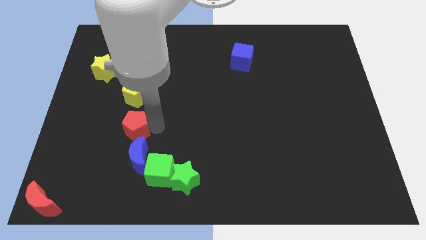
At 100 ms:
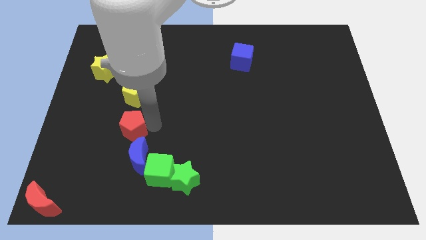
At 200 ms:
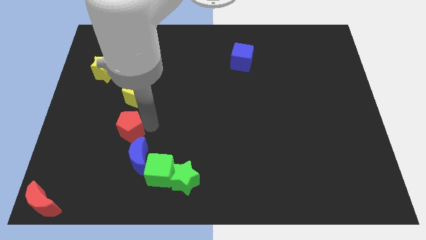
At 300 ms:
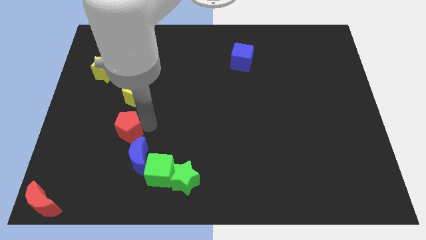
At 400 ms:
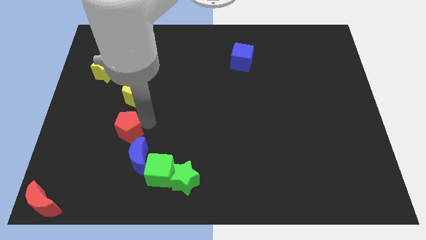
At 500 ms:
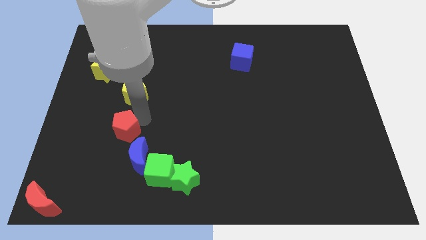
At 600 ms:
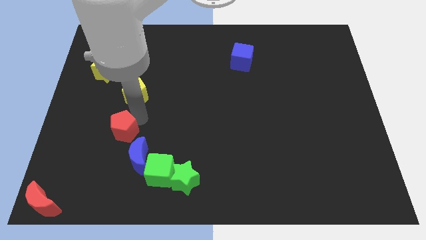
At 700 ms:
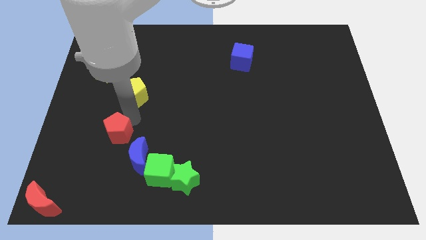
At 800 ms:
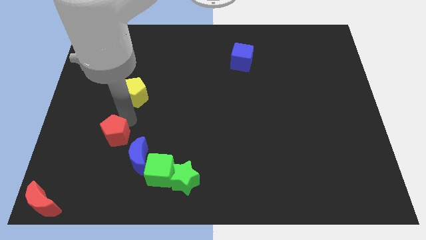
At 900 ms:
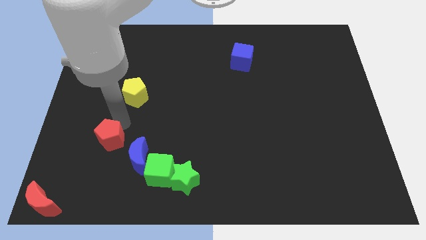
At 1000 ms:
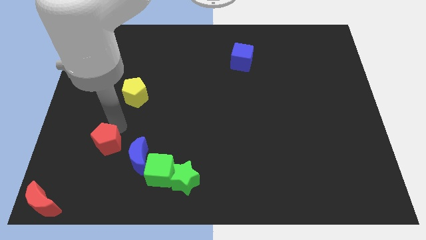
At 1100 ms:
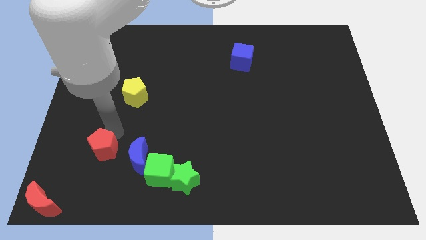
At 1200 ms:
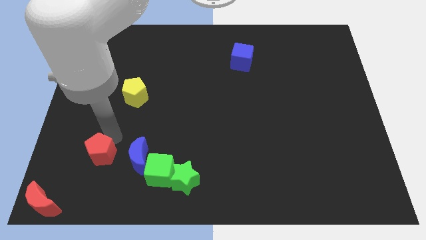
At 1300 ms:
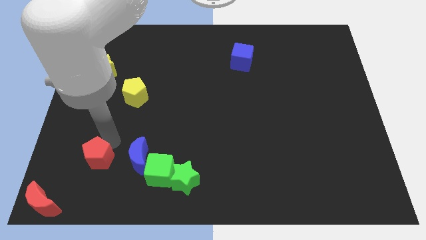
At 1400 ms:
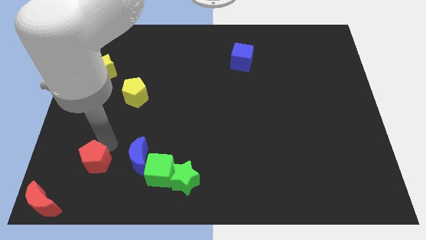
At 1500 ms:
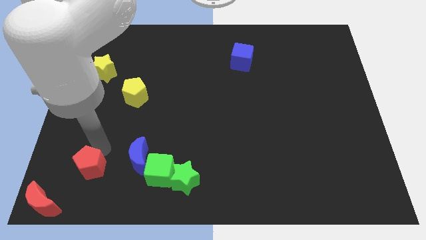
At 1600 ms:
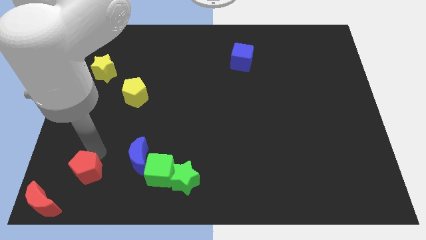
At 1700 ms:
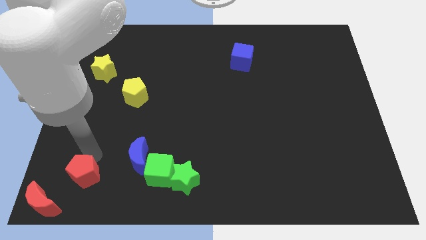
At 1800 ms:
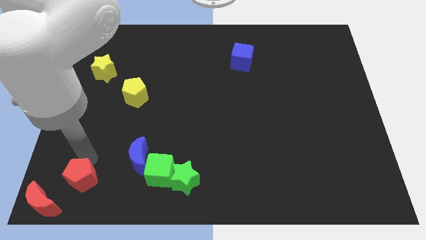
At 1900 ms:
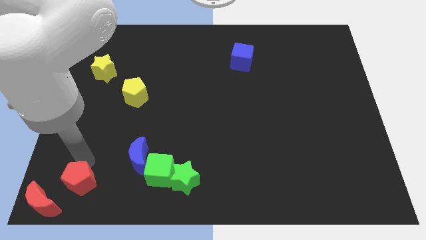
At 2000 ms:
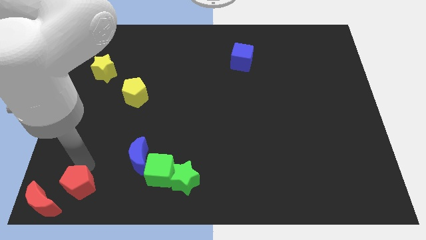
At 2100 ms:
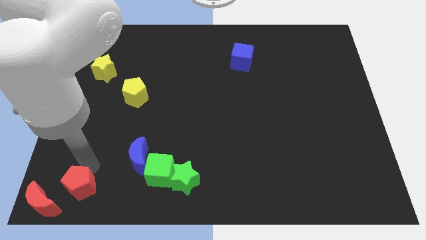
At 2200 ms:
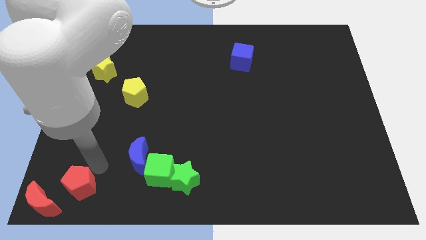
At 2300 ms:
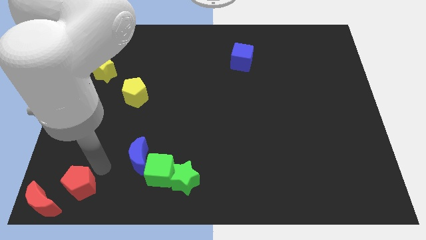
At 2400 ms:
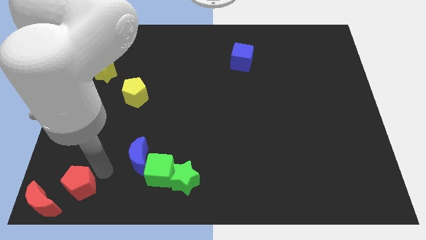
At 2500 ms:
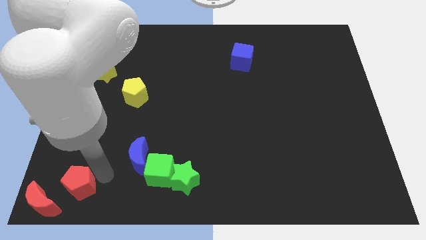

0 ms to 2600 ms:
move the red pentagon to the top right side of the red moon

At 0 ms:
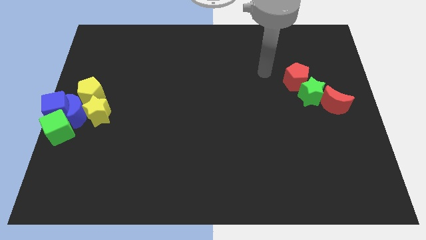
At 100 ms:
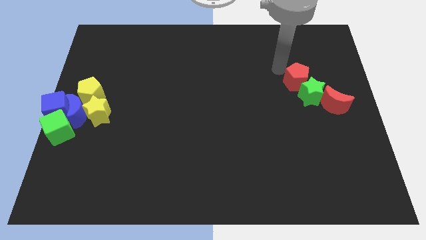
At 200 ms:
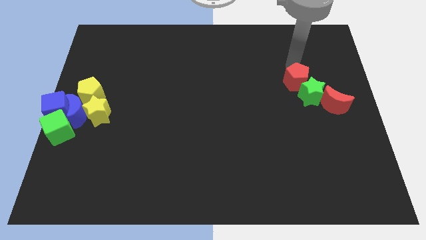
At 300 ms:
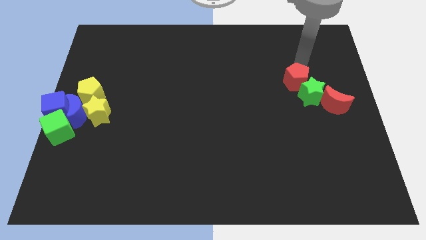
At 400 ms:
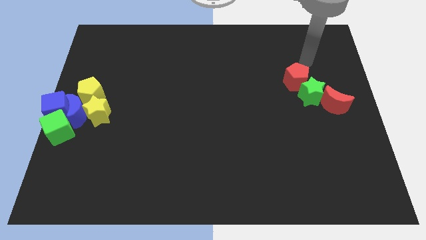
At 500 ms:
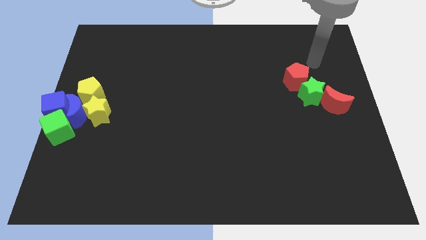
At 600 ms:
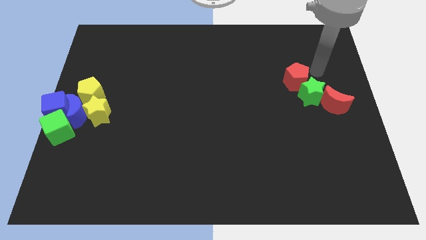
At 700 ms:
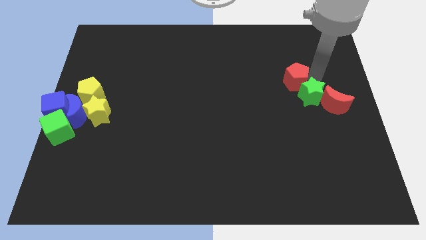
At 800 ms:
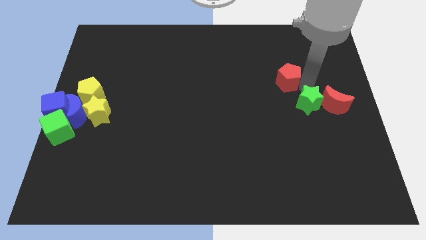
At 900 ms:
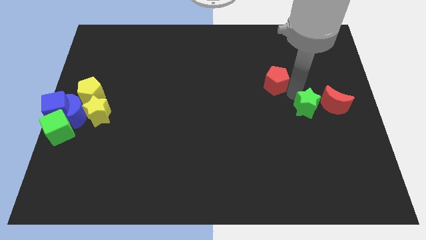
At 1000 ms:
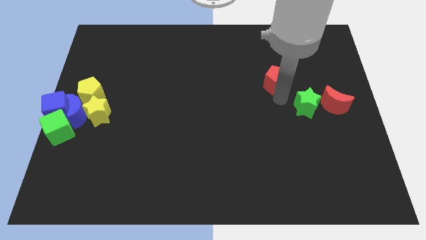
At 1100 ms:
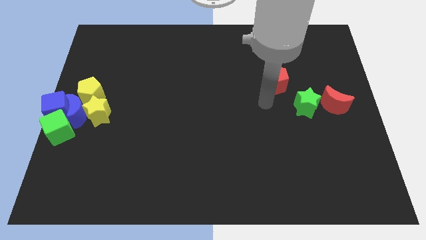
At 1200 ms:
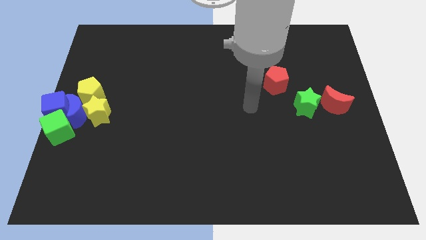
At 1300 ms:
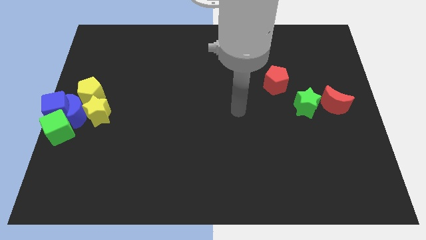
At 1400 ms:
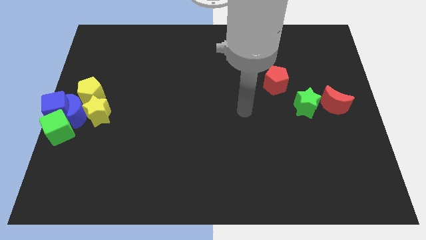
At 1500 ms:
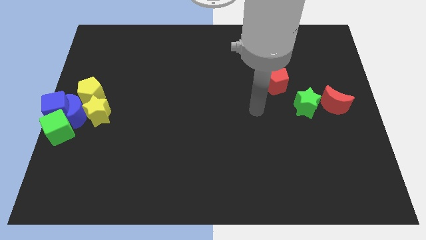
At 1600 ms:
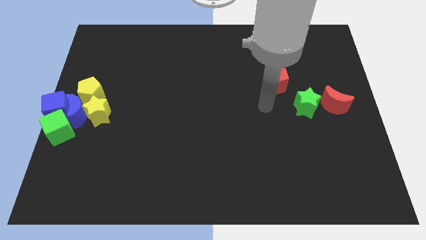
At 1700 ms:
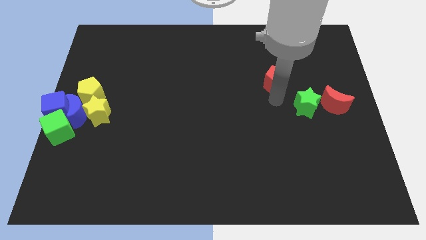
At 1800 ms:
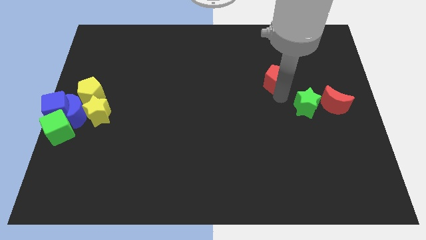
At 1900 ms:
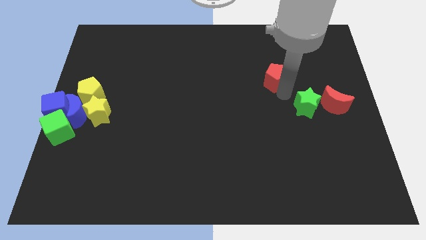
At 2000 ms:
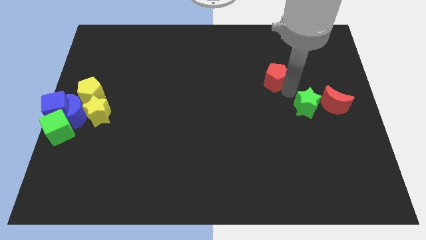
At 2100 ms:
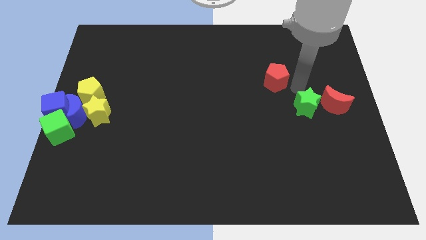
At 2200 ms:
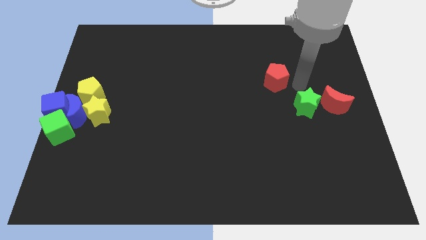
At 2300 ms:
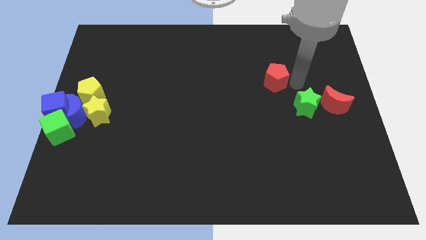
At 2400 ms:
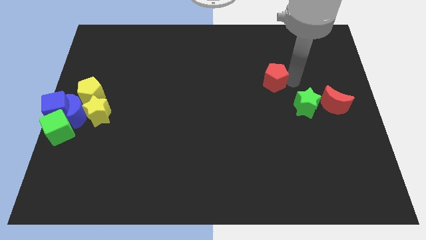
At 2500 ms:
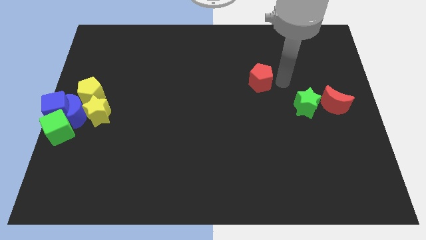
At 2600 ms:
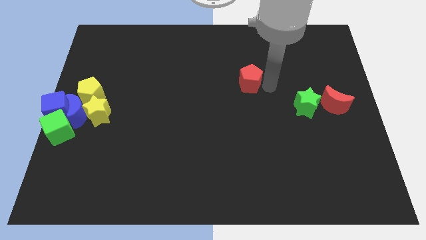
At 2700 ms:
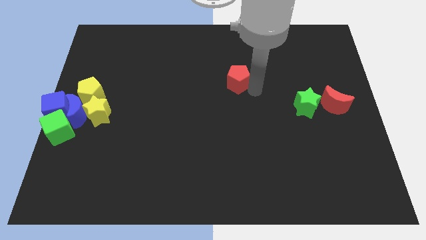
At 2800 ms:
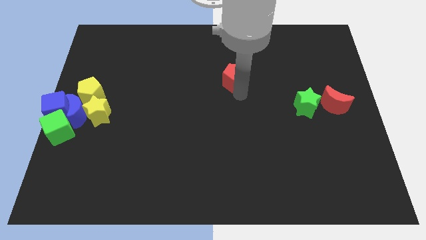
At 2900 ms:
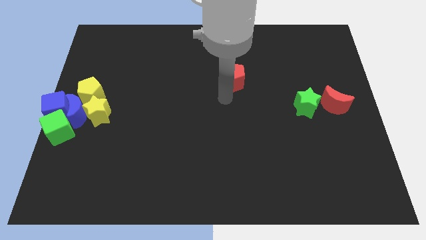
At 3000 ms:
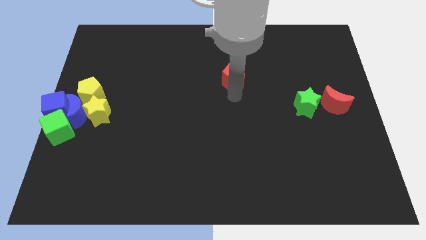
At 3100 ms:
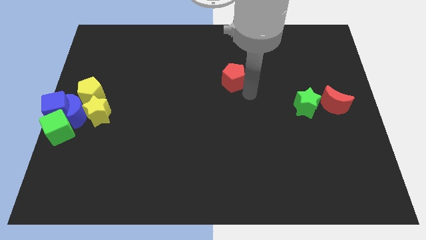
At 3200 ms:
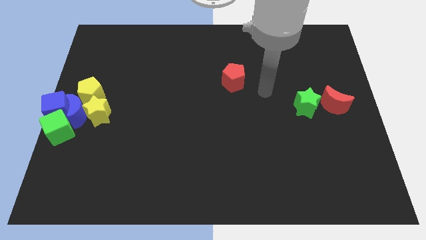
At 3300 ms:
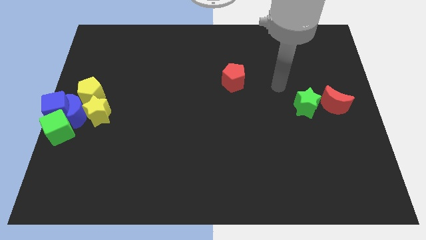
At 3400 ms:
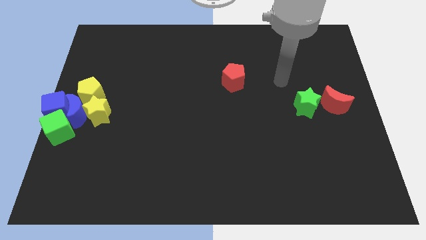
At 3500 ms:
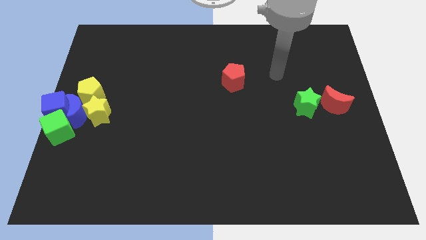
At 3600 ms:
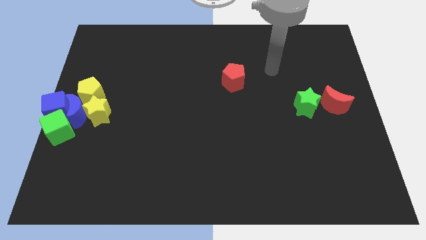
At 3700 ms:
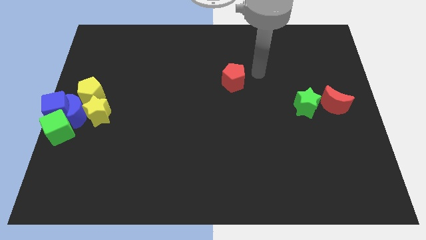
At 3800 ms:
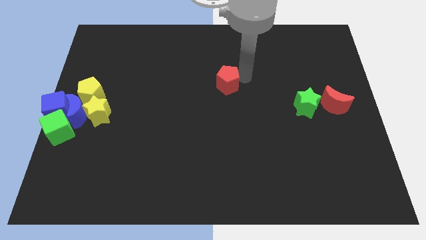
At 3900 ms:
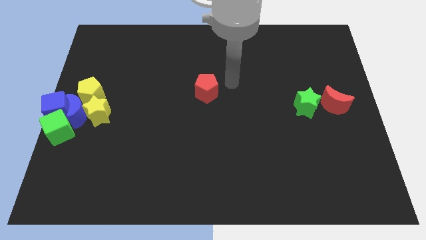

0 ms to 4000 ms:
slide the red pentagon to the center of the board

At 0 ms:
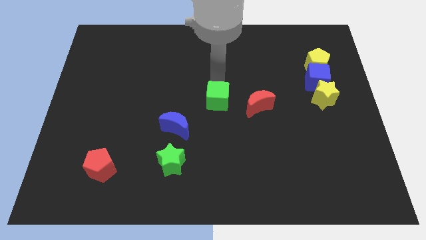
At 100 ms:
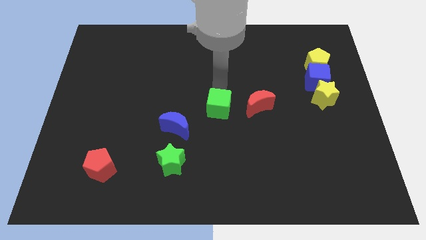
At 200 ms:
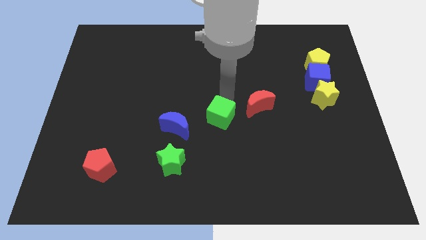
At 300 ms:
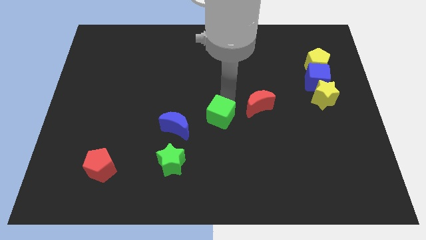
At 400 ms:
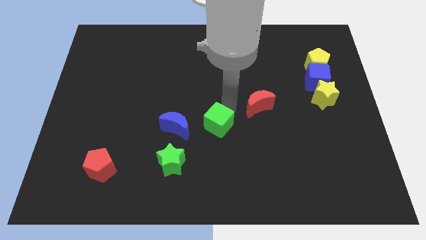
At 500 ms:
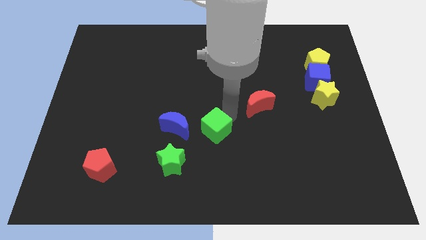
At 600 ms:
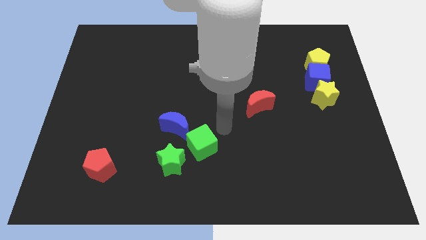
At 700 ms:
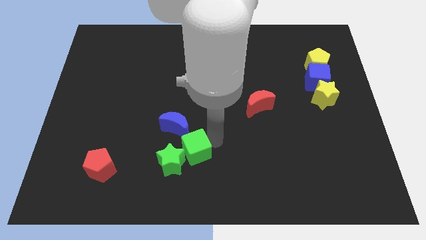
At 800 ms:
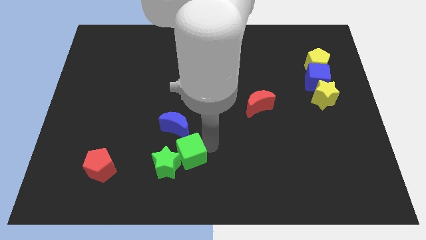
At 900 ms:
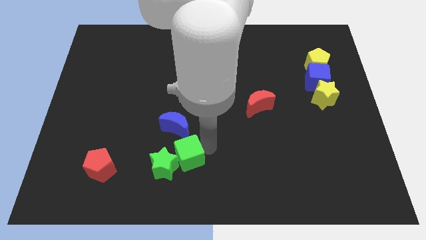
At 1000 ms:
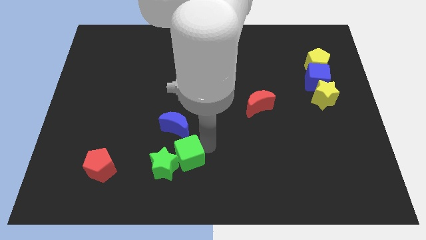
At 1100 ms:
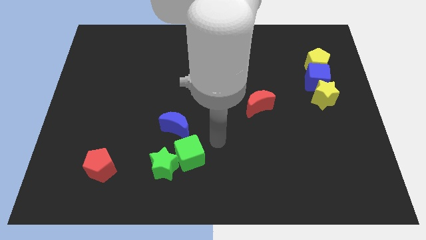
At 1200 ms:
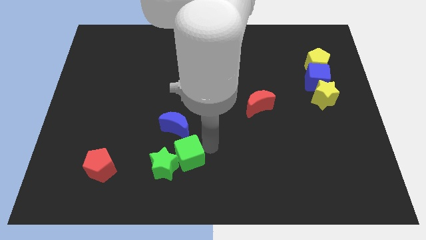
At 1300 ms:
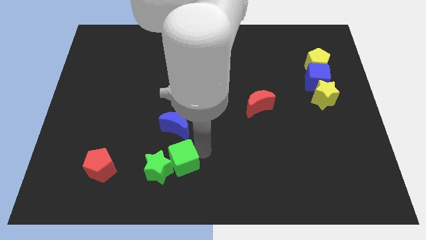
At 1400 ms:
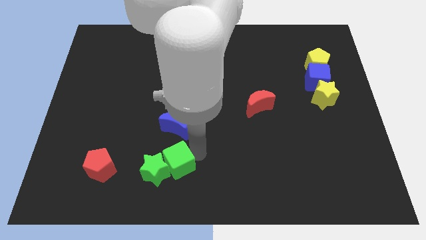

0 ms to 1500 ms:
push the green cube into the green star

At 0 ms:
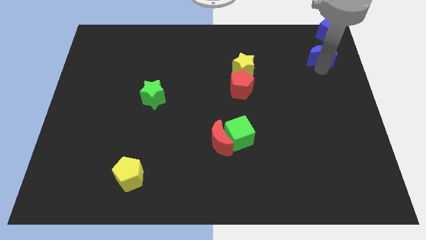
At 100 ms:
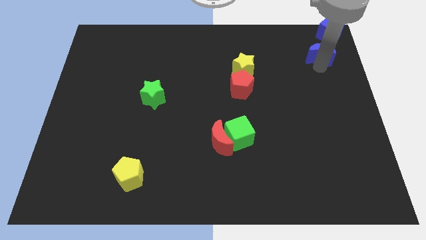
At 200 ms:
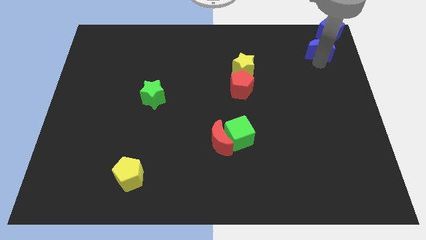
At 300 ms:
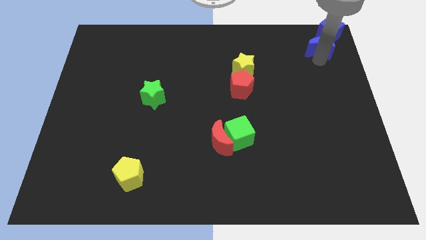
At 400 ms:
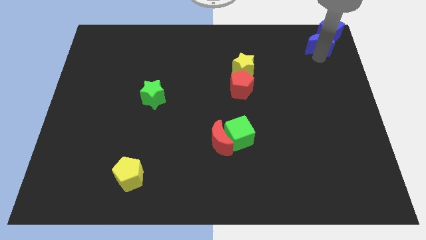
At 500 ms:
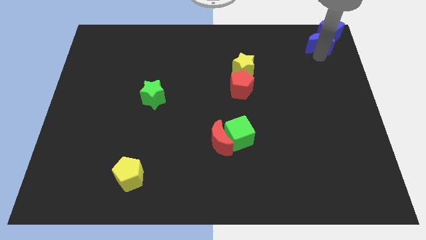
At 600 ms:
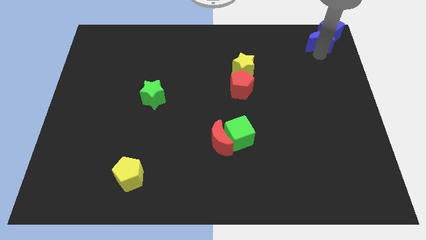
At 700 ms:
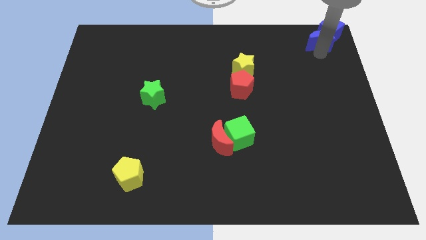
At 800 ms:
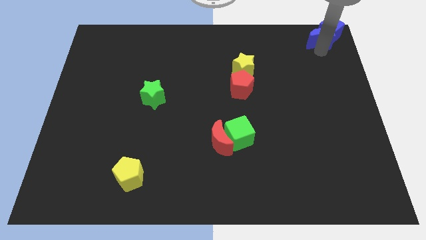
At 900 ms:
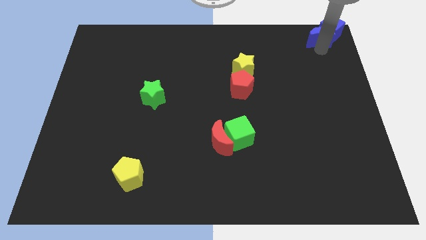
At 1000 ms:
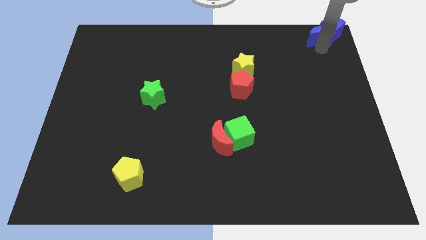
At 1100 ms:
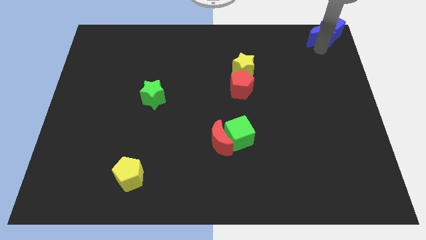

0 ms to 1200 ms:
drag the blue moon into the blue cube
